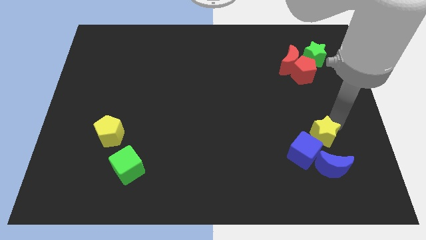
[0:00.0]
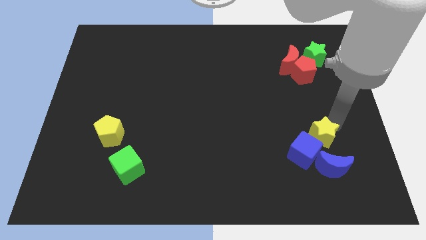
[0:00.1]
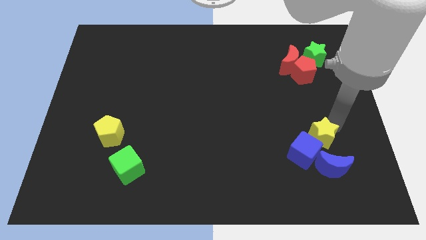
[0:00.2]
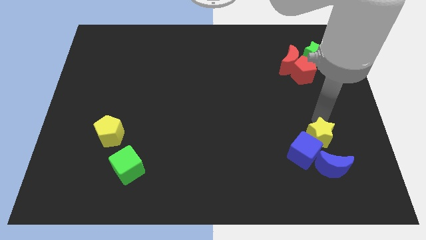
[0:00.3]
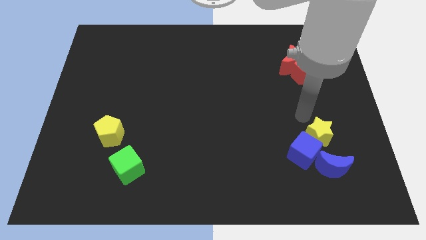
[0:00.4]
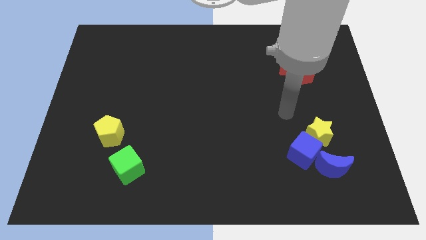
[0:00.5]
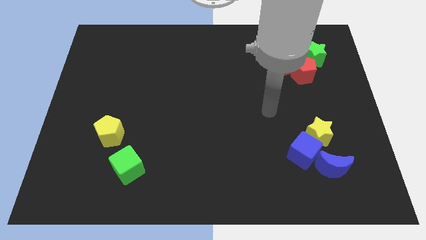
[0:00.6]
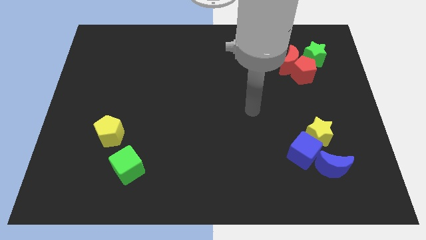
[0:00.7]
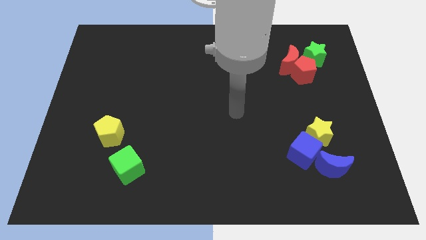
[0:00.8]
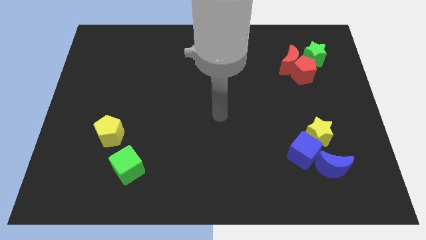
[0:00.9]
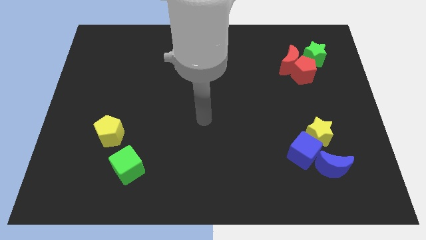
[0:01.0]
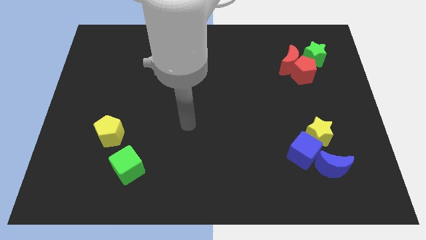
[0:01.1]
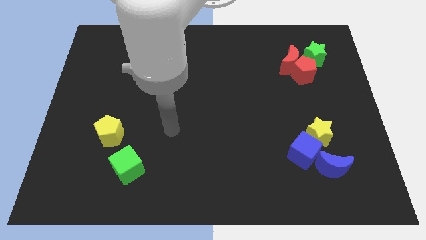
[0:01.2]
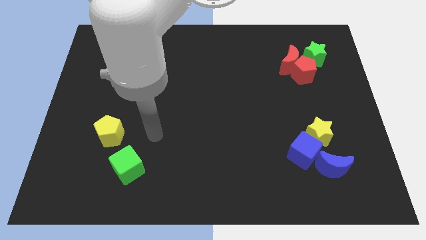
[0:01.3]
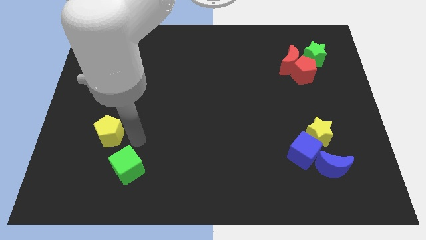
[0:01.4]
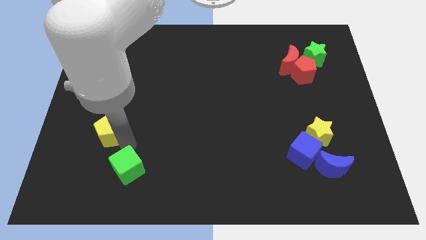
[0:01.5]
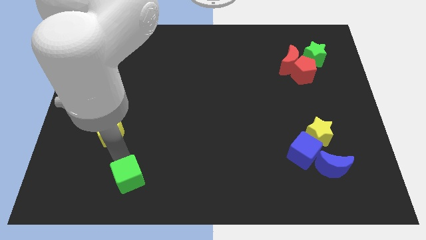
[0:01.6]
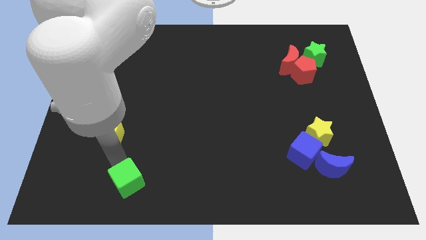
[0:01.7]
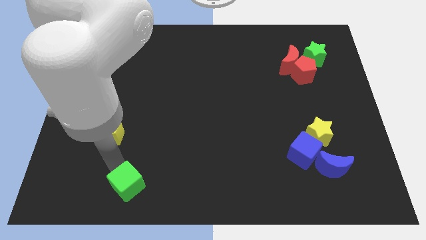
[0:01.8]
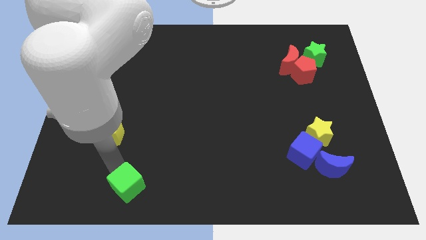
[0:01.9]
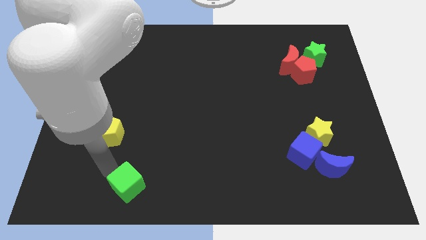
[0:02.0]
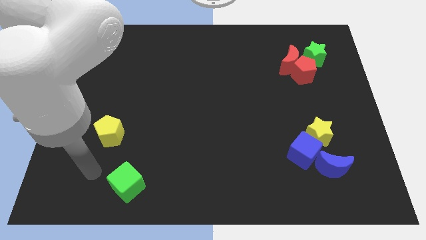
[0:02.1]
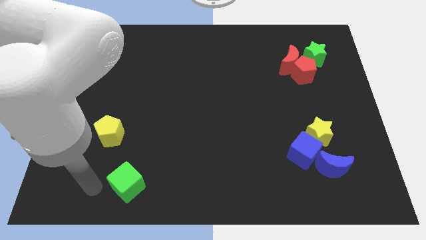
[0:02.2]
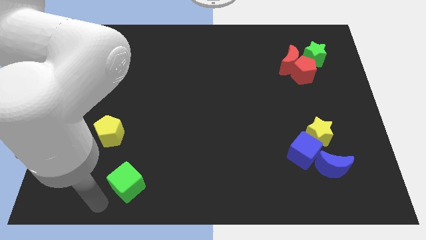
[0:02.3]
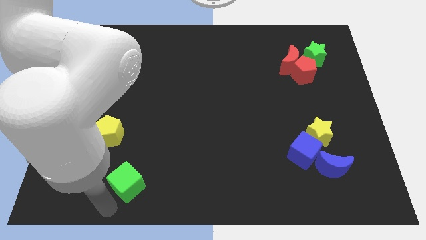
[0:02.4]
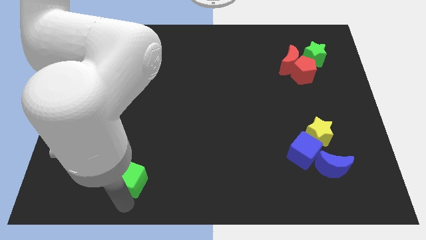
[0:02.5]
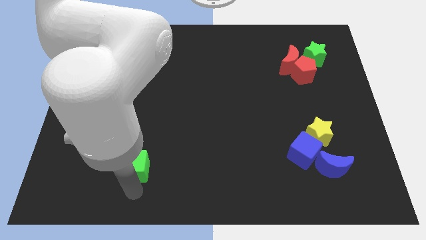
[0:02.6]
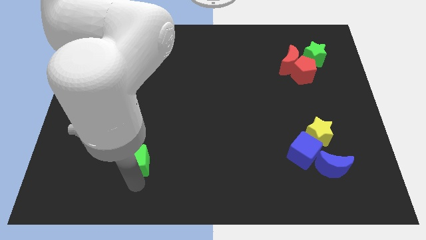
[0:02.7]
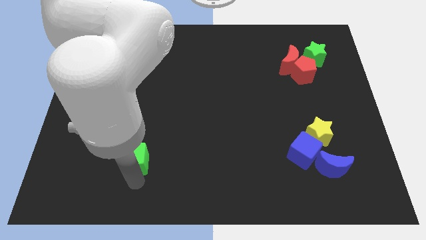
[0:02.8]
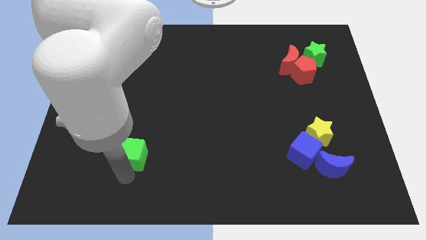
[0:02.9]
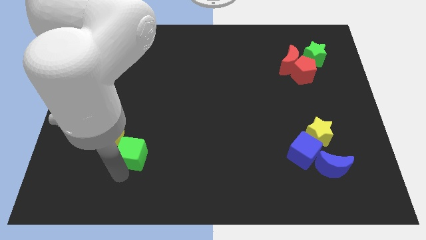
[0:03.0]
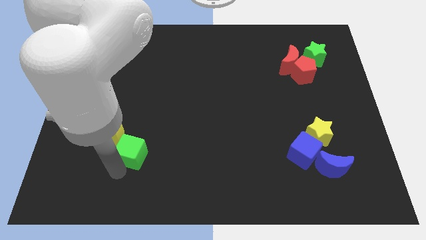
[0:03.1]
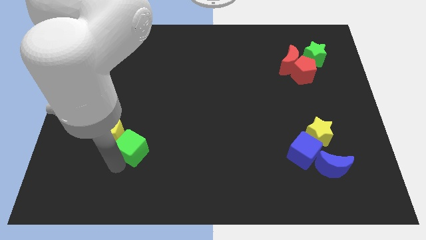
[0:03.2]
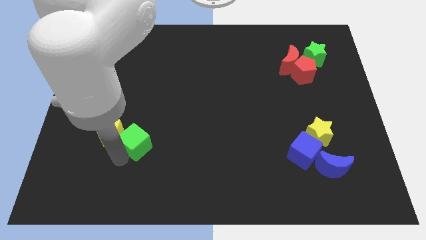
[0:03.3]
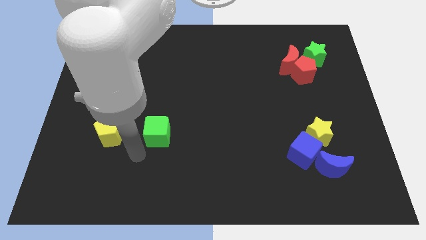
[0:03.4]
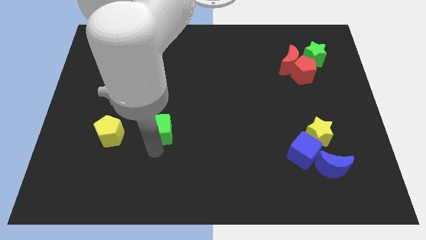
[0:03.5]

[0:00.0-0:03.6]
push the green cube to the right of the yellow pentagon

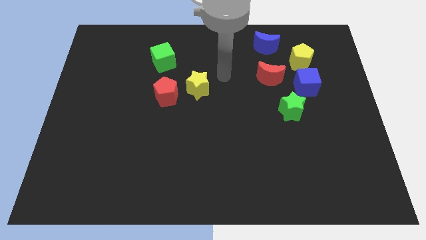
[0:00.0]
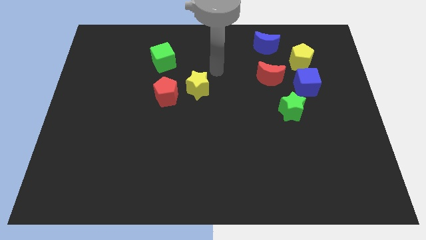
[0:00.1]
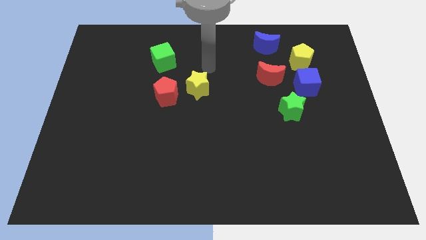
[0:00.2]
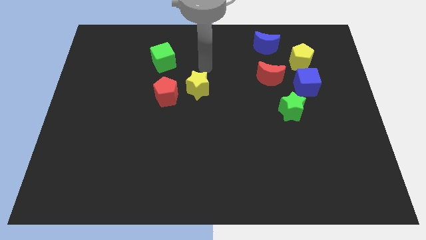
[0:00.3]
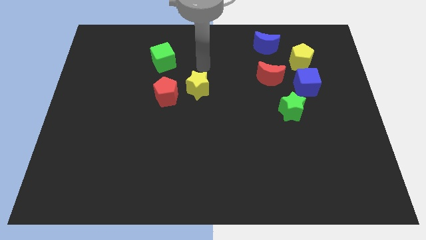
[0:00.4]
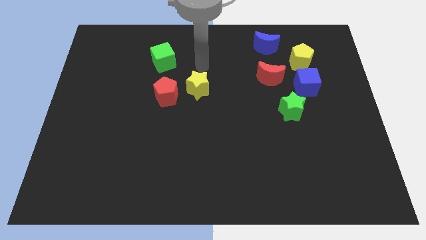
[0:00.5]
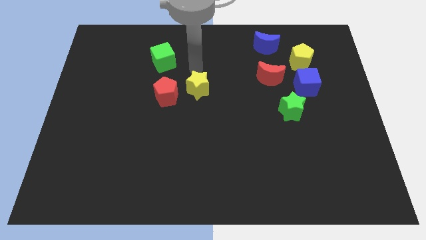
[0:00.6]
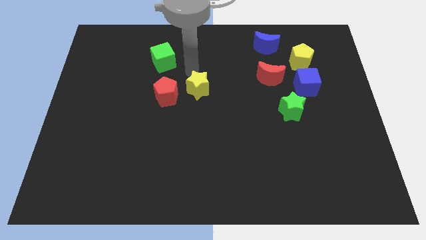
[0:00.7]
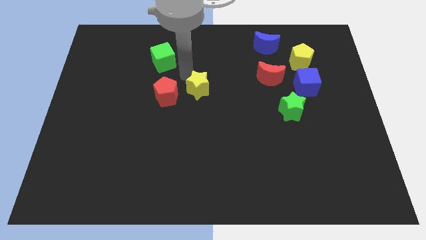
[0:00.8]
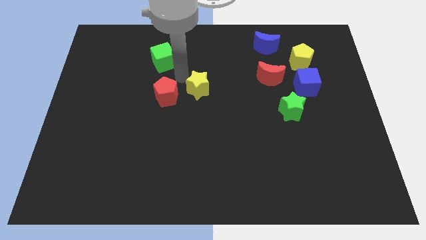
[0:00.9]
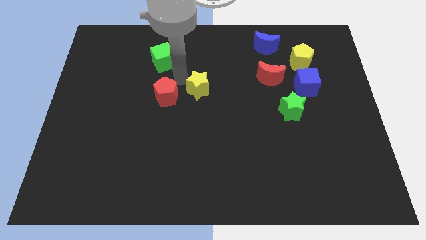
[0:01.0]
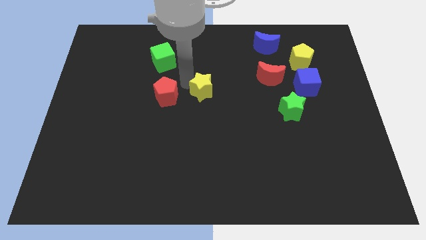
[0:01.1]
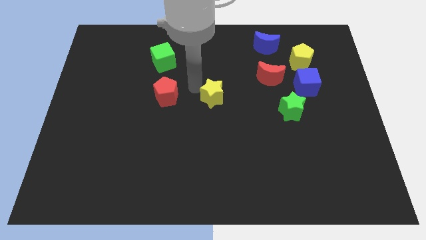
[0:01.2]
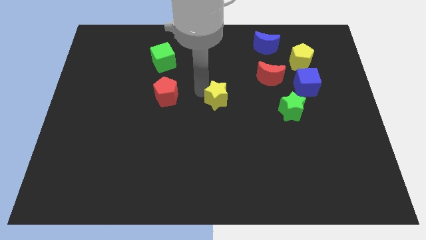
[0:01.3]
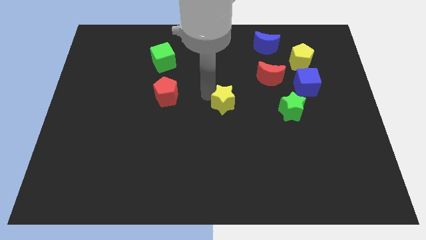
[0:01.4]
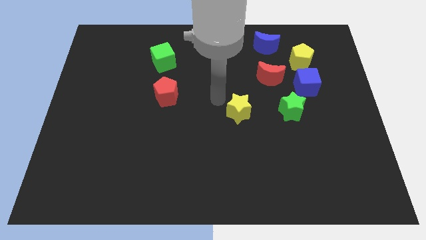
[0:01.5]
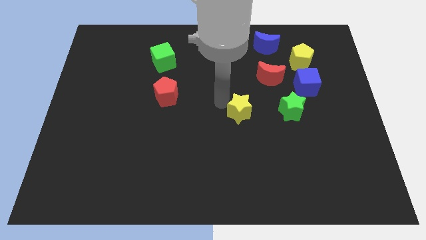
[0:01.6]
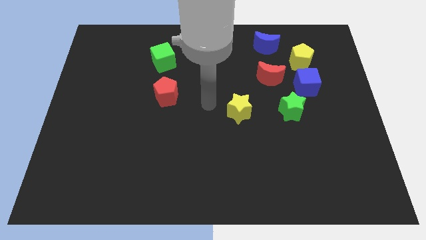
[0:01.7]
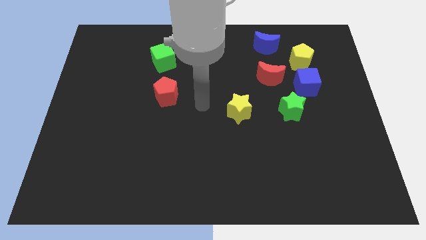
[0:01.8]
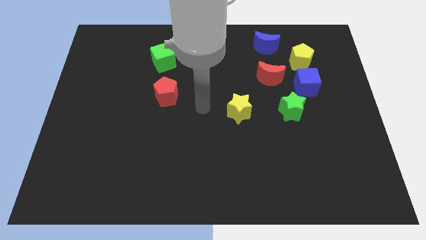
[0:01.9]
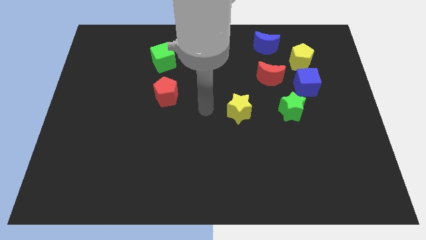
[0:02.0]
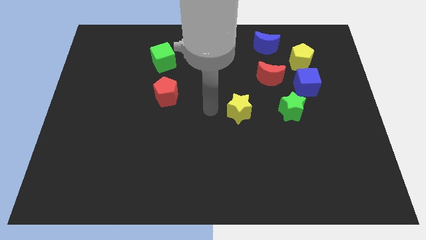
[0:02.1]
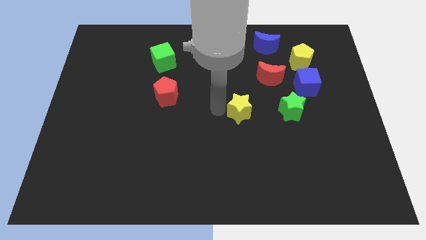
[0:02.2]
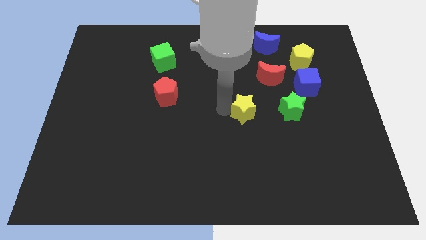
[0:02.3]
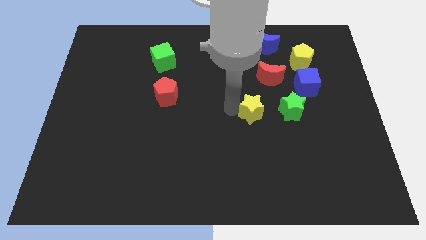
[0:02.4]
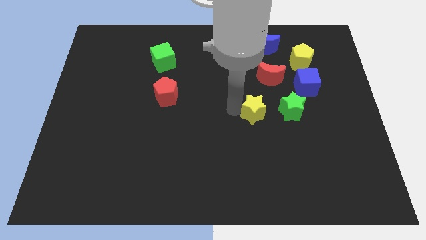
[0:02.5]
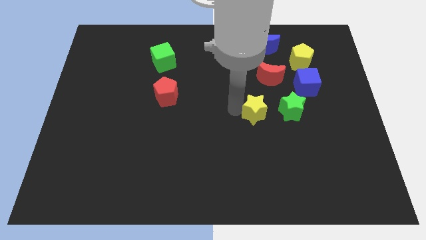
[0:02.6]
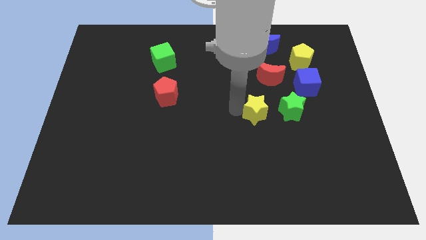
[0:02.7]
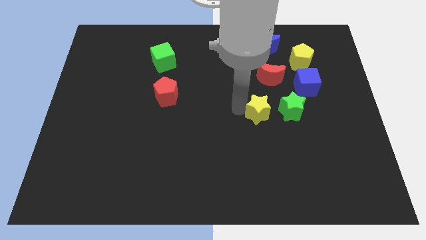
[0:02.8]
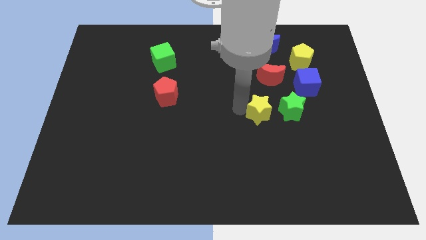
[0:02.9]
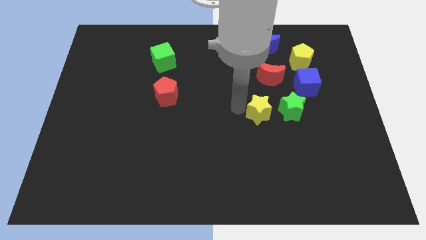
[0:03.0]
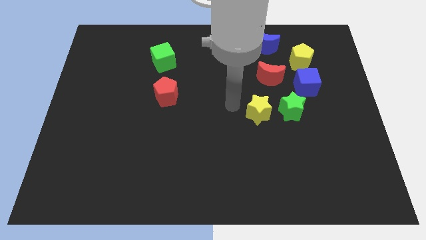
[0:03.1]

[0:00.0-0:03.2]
place the yellow star to the left of the green star

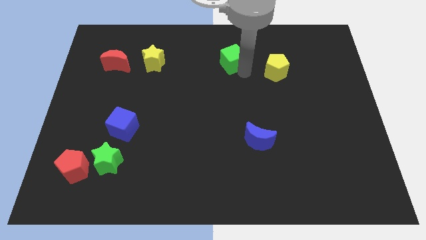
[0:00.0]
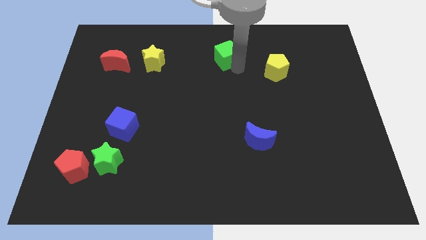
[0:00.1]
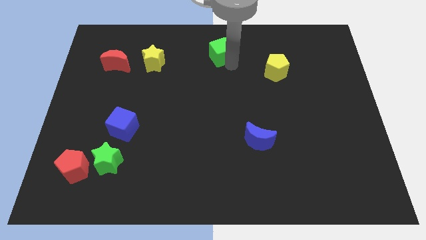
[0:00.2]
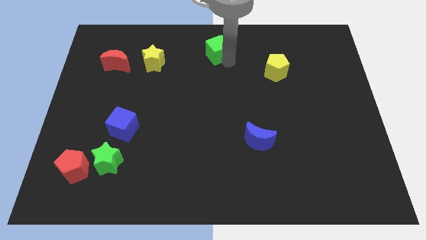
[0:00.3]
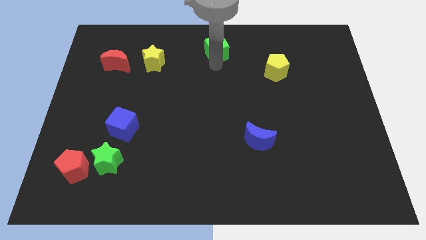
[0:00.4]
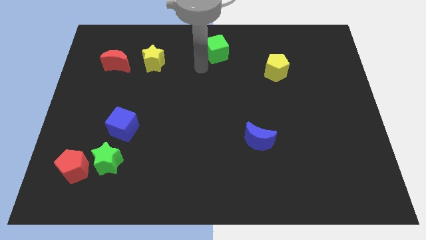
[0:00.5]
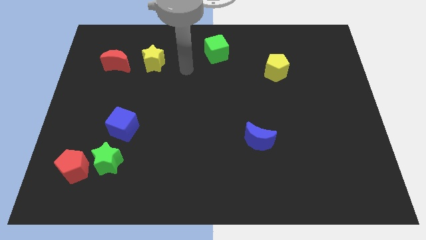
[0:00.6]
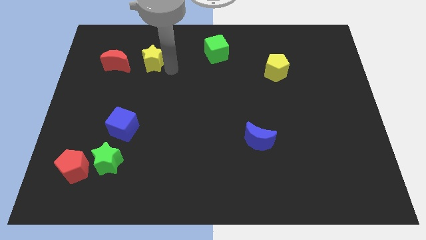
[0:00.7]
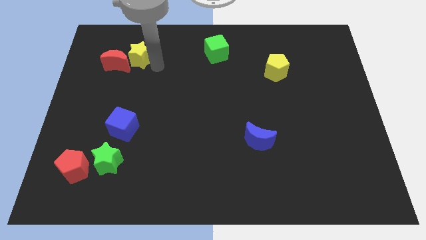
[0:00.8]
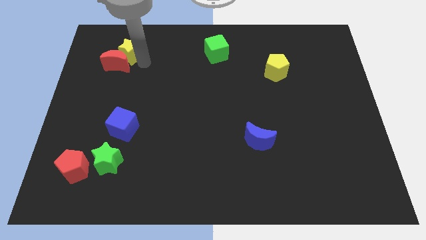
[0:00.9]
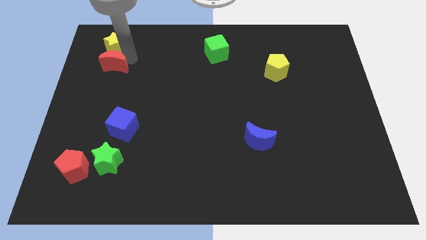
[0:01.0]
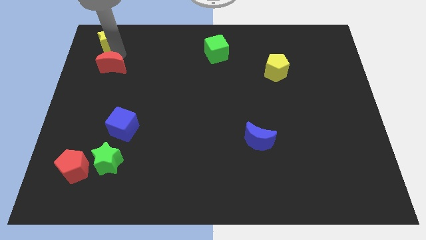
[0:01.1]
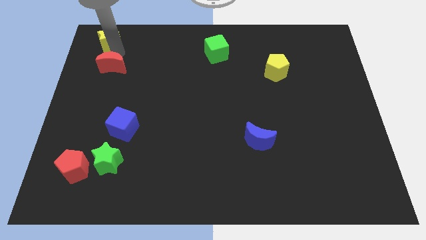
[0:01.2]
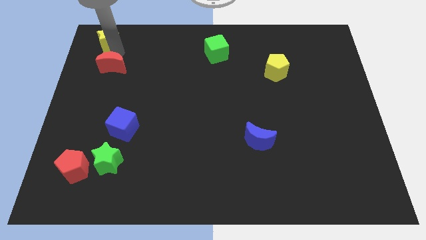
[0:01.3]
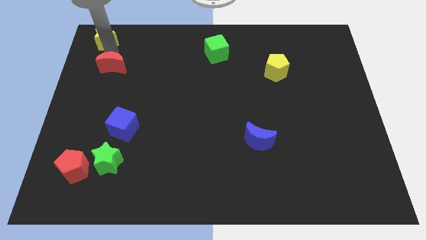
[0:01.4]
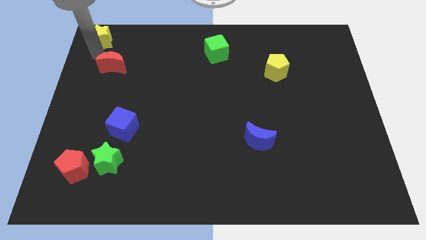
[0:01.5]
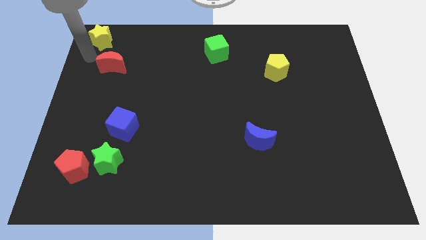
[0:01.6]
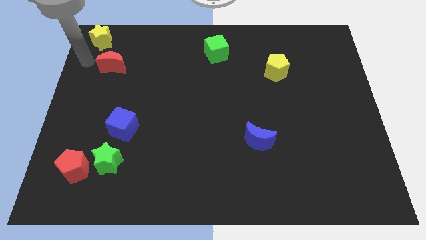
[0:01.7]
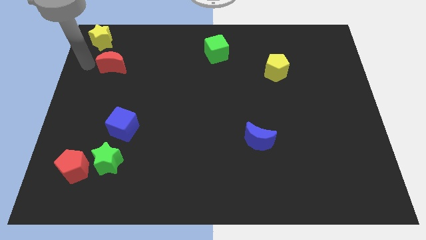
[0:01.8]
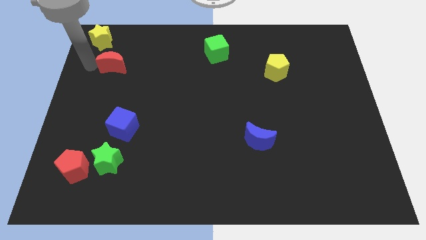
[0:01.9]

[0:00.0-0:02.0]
push the green cube and yellow star upwards
